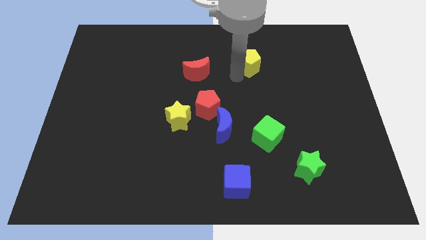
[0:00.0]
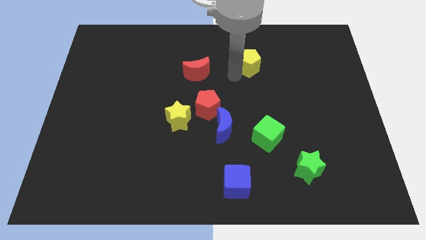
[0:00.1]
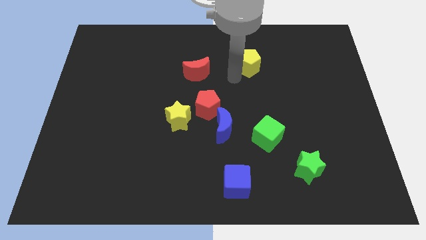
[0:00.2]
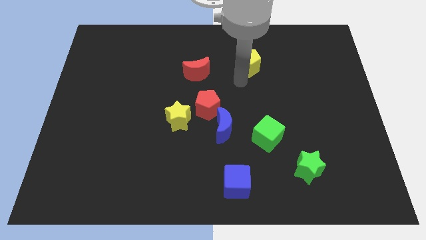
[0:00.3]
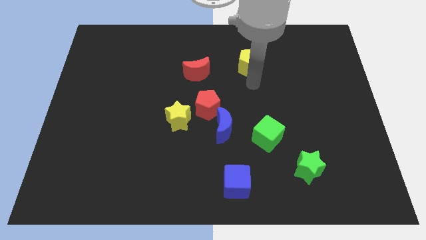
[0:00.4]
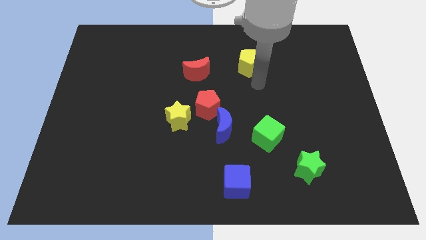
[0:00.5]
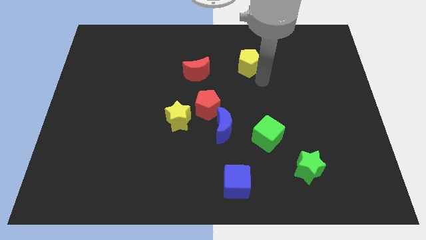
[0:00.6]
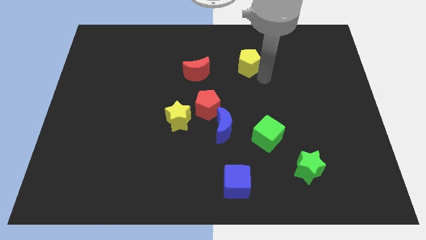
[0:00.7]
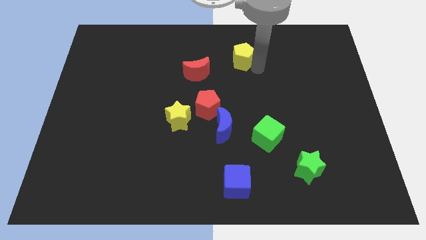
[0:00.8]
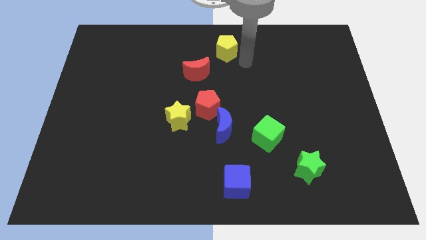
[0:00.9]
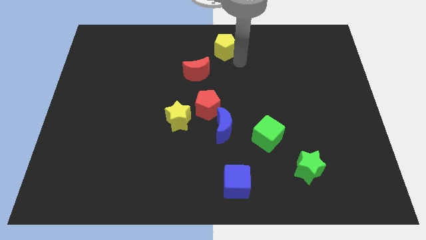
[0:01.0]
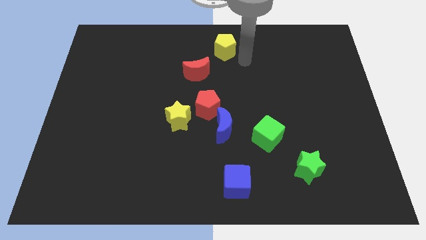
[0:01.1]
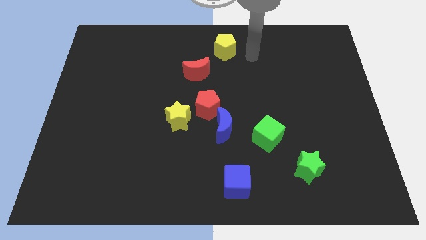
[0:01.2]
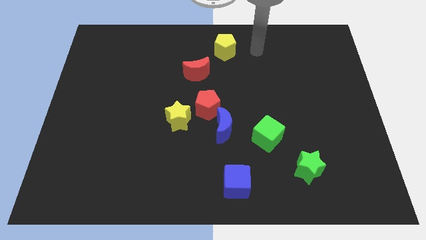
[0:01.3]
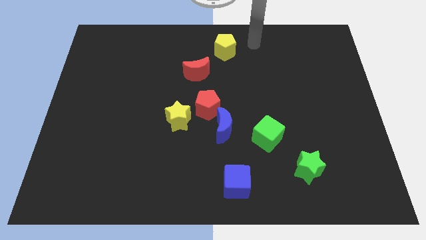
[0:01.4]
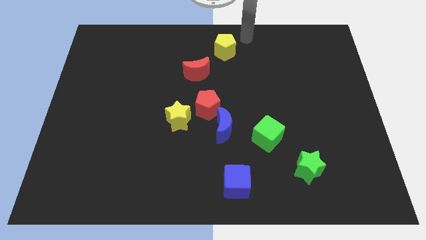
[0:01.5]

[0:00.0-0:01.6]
put the yellow pentagon at the top right of the red crescent

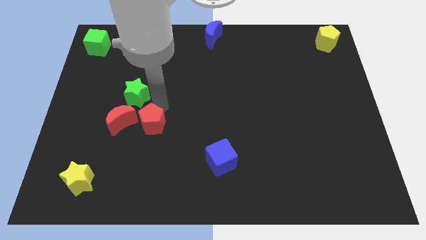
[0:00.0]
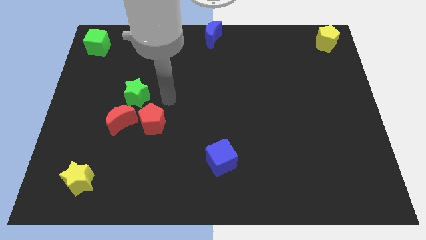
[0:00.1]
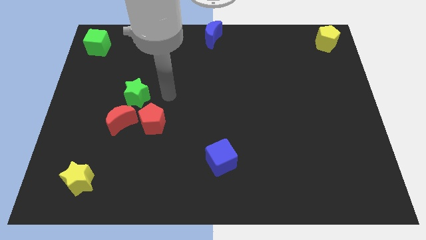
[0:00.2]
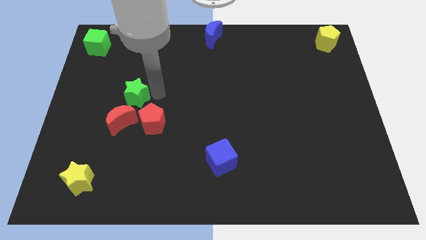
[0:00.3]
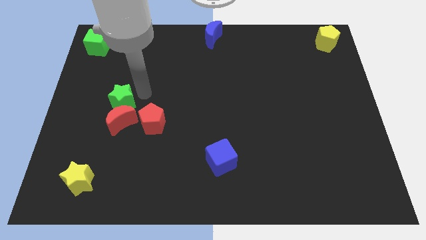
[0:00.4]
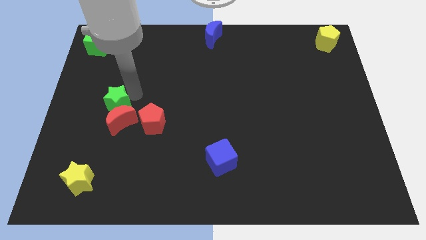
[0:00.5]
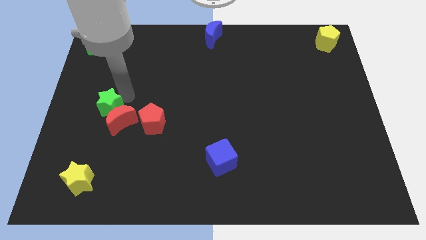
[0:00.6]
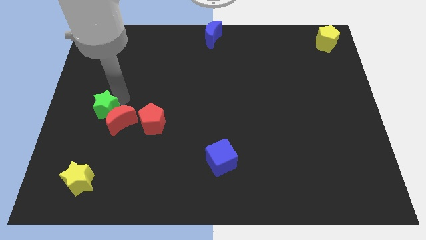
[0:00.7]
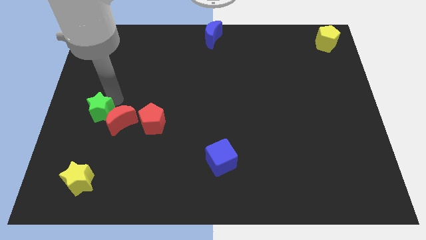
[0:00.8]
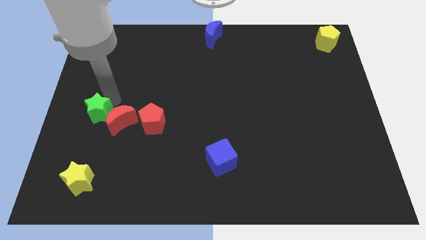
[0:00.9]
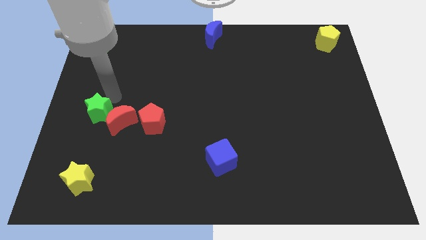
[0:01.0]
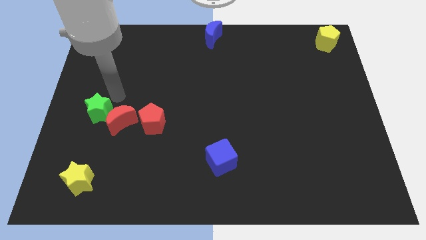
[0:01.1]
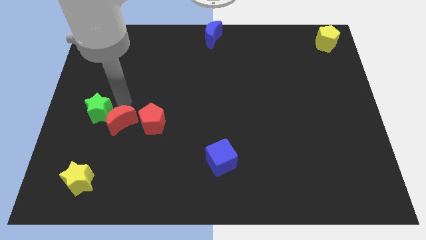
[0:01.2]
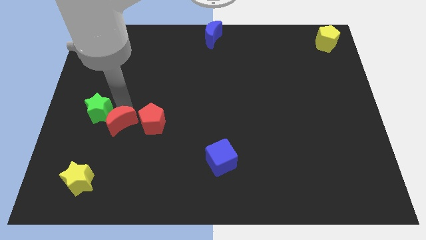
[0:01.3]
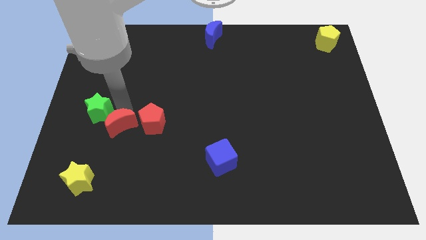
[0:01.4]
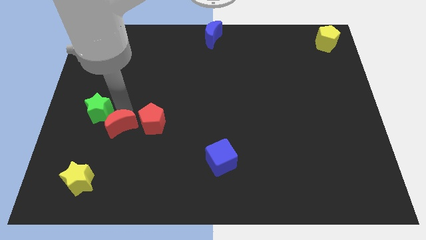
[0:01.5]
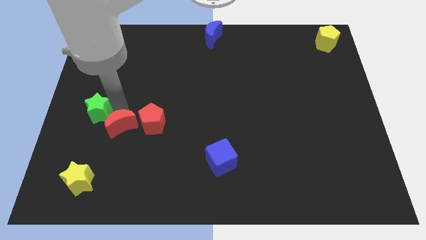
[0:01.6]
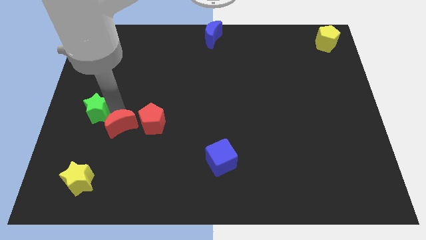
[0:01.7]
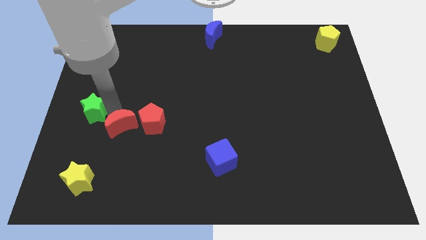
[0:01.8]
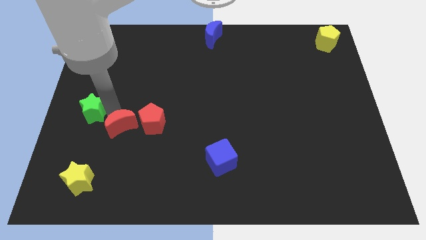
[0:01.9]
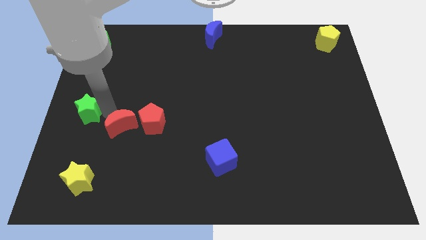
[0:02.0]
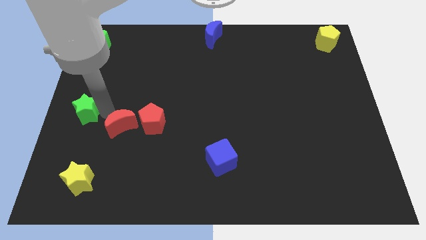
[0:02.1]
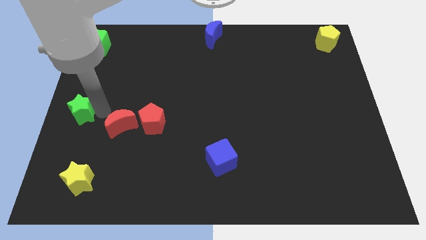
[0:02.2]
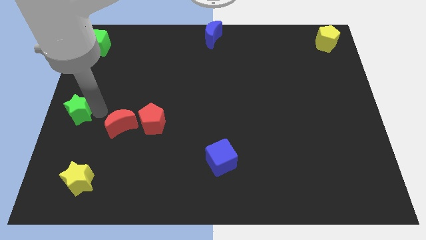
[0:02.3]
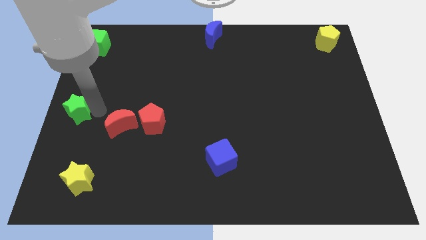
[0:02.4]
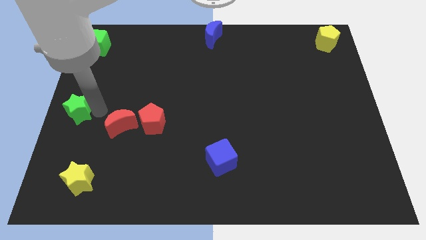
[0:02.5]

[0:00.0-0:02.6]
move green star to the left corner of the board

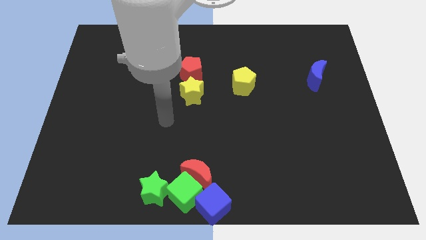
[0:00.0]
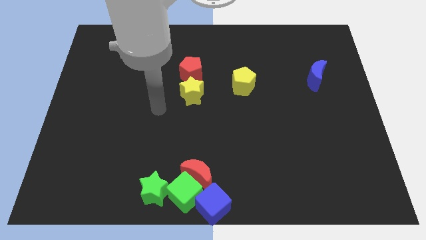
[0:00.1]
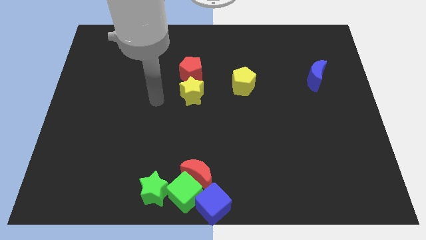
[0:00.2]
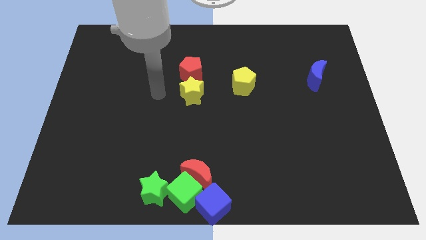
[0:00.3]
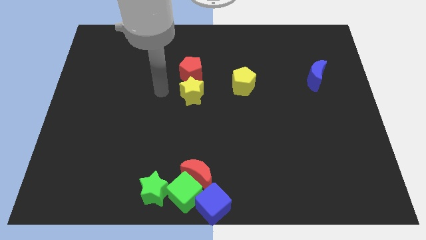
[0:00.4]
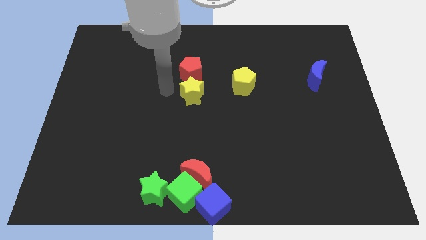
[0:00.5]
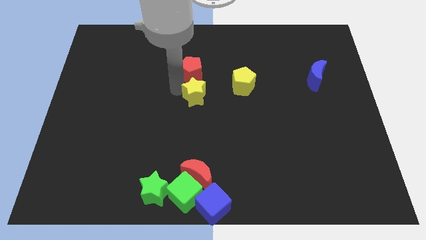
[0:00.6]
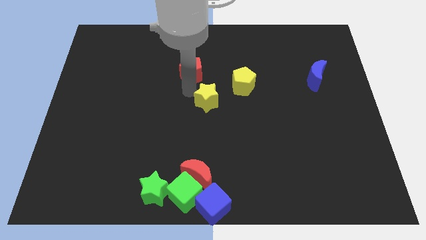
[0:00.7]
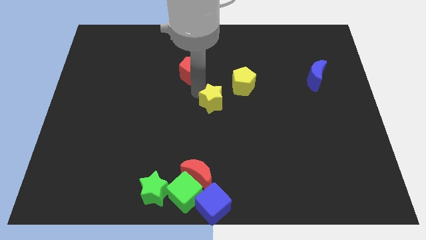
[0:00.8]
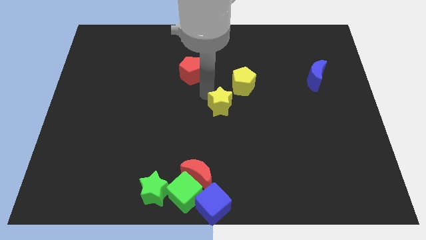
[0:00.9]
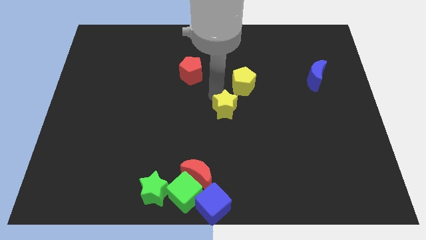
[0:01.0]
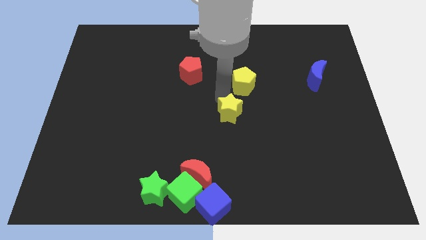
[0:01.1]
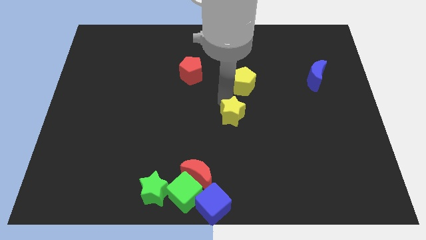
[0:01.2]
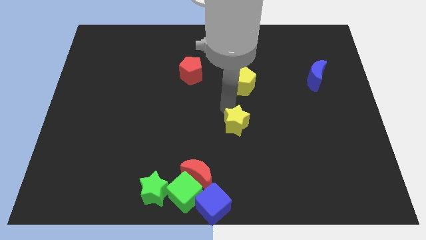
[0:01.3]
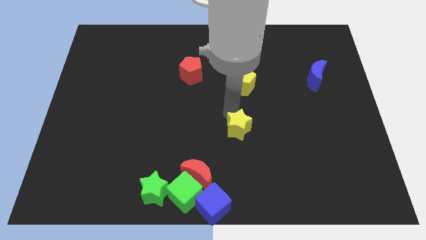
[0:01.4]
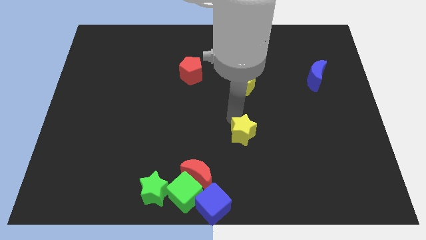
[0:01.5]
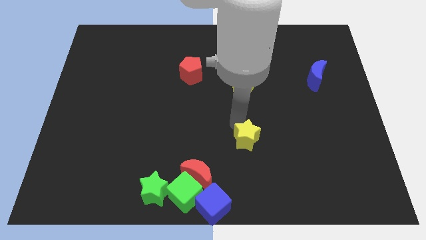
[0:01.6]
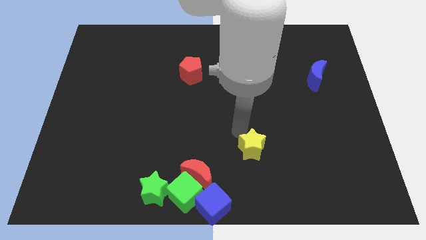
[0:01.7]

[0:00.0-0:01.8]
push the yellow star below the yellow pentagon

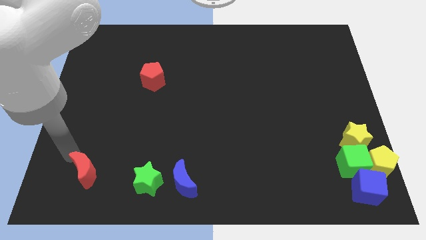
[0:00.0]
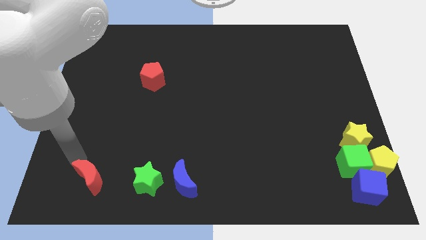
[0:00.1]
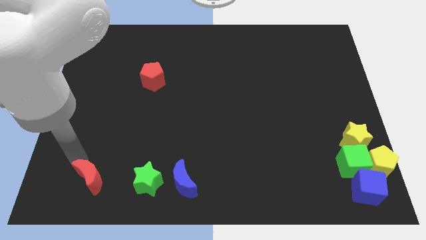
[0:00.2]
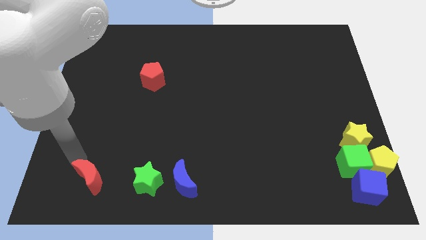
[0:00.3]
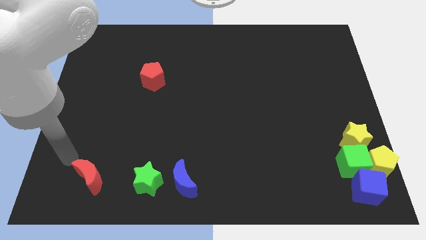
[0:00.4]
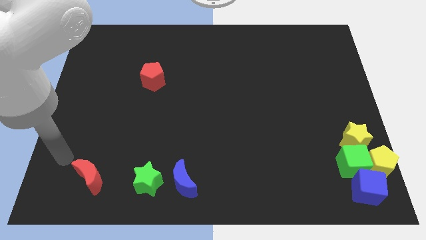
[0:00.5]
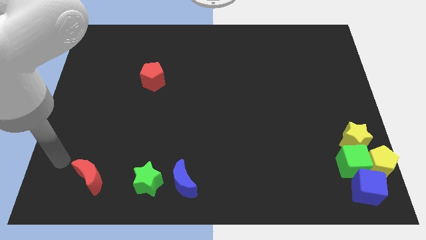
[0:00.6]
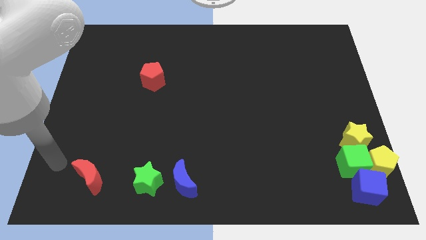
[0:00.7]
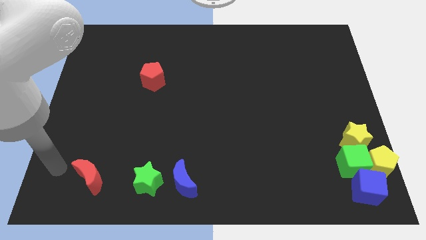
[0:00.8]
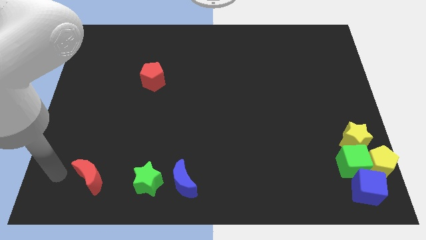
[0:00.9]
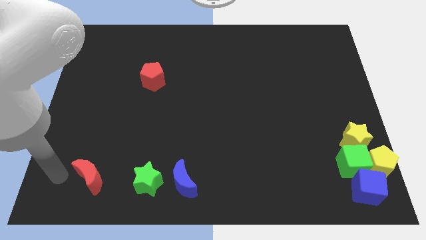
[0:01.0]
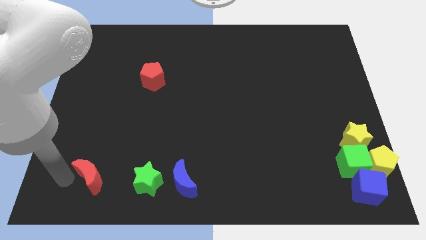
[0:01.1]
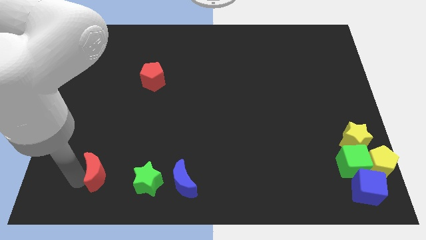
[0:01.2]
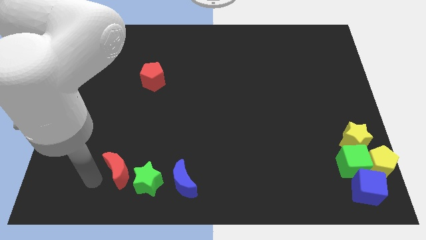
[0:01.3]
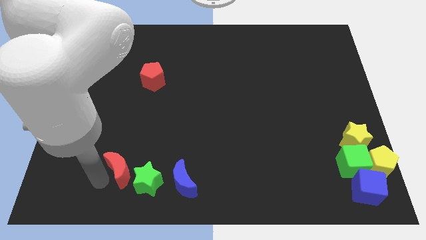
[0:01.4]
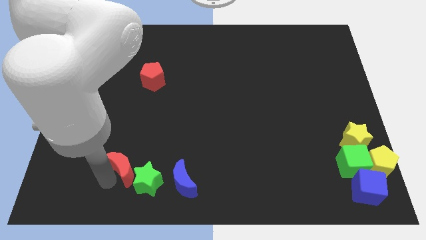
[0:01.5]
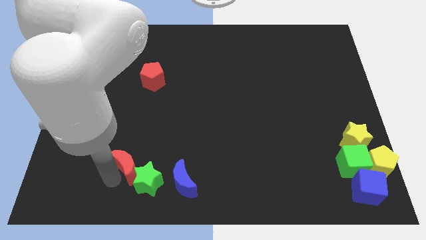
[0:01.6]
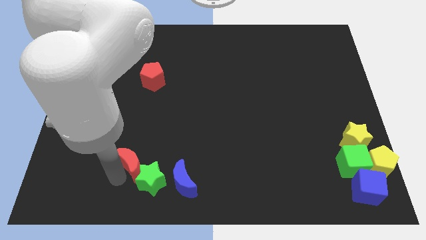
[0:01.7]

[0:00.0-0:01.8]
push the red moon into the green star

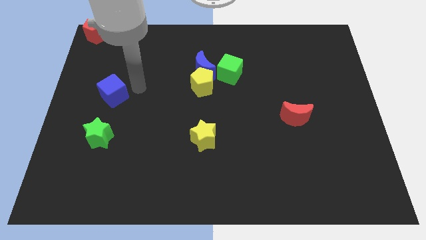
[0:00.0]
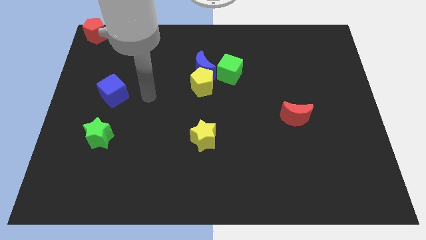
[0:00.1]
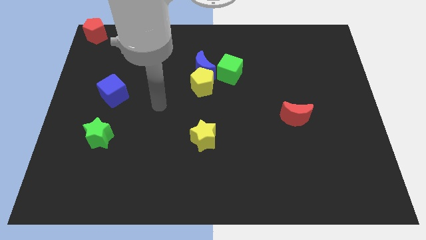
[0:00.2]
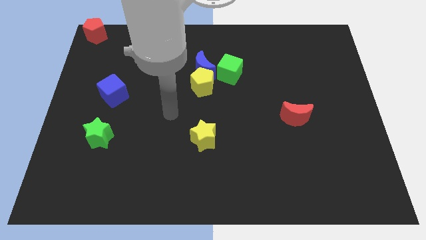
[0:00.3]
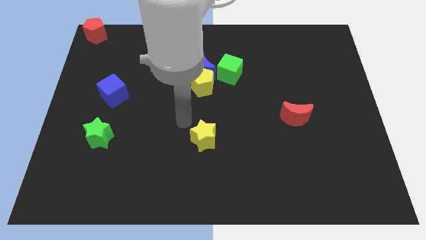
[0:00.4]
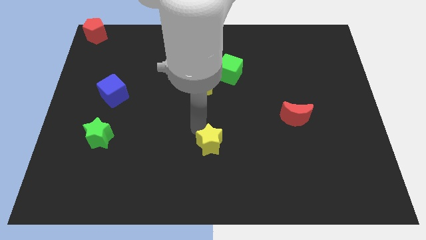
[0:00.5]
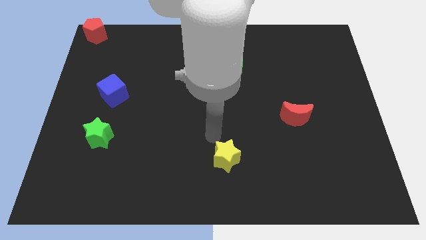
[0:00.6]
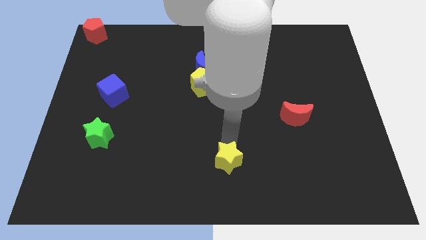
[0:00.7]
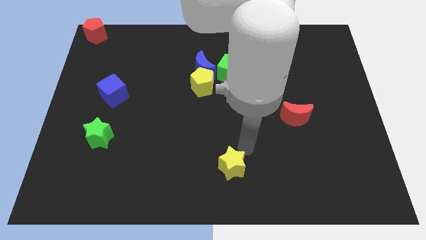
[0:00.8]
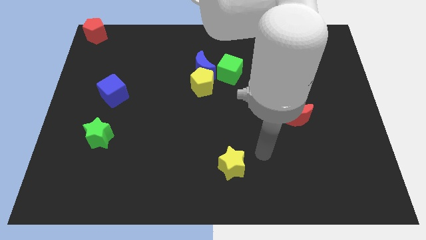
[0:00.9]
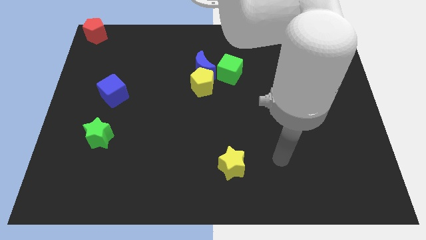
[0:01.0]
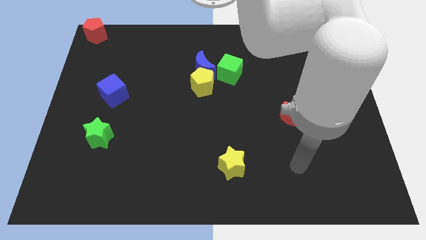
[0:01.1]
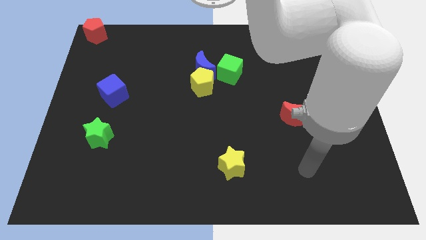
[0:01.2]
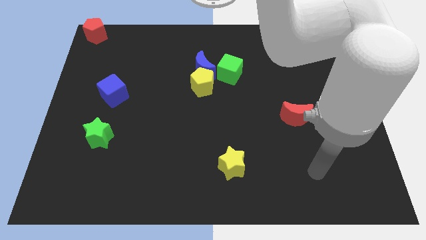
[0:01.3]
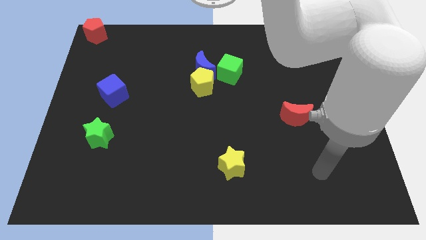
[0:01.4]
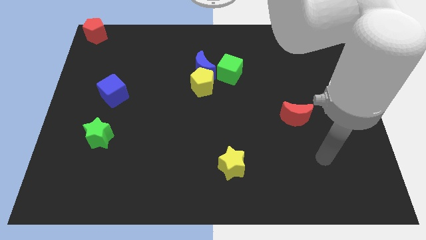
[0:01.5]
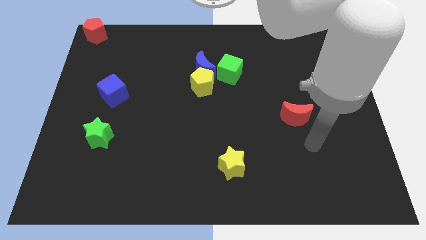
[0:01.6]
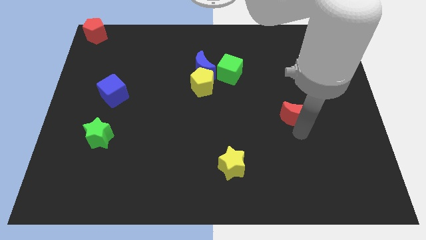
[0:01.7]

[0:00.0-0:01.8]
move the yellow star slightly downwards to the bottom of the board
